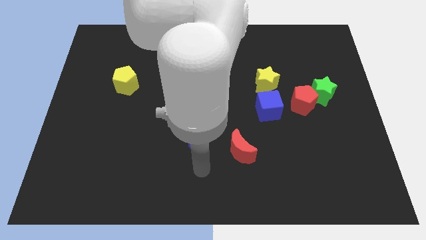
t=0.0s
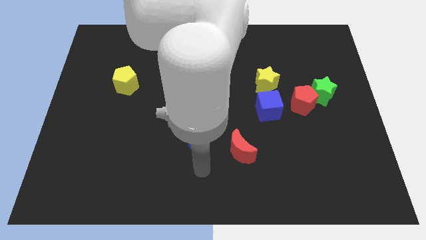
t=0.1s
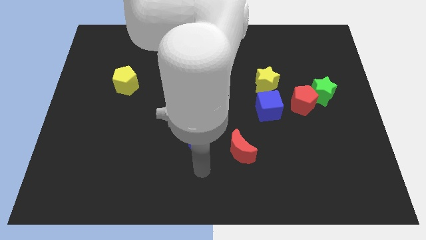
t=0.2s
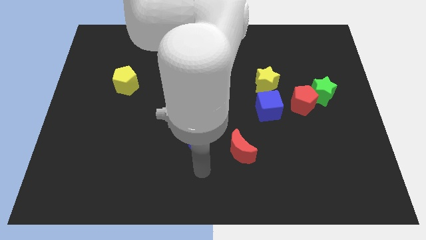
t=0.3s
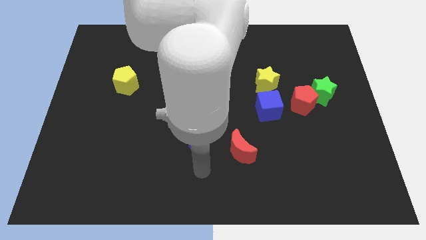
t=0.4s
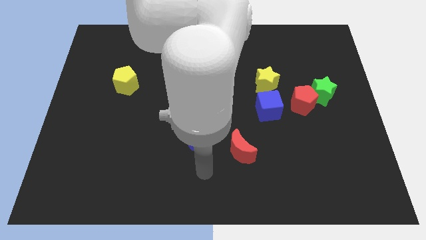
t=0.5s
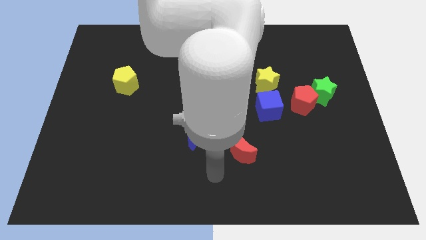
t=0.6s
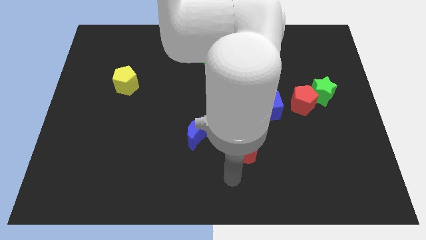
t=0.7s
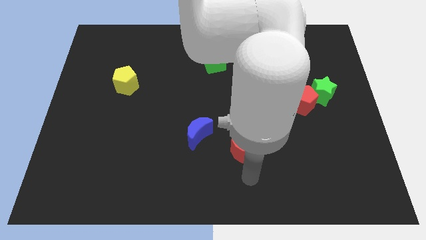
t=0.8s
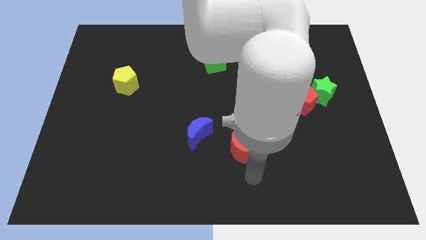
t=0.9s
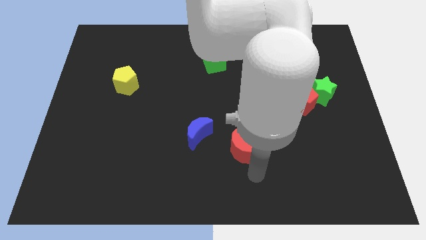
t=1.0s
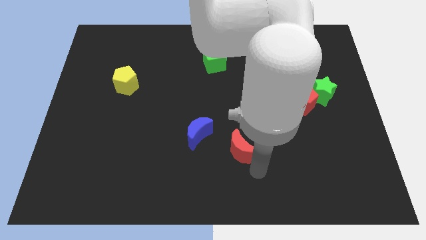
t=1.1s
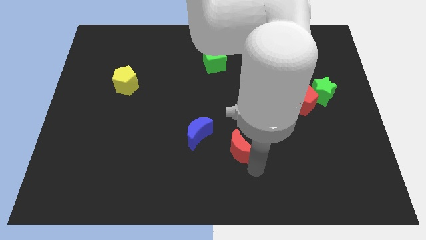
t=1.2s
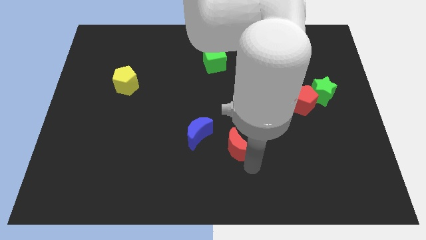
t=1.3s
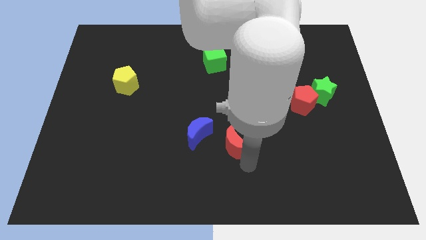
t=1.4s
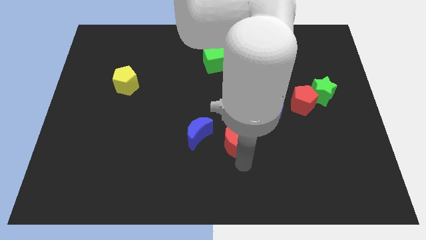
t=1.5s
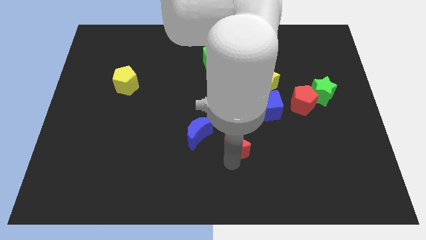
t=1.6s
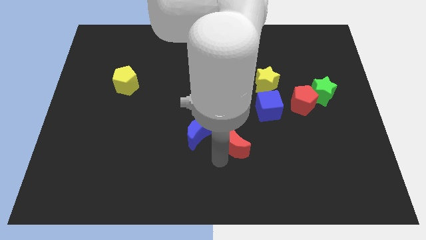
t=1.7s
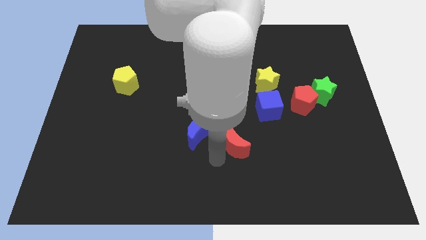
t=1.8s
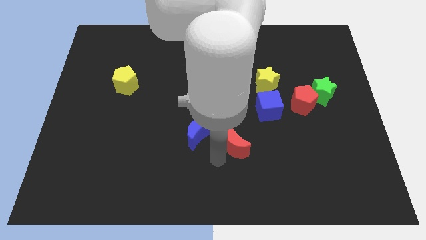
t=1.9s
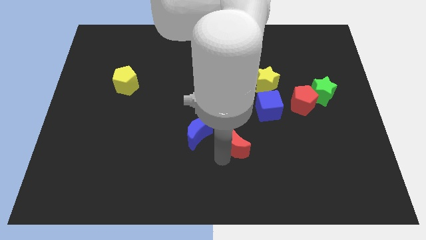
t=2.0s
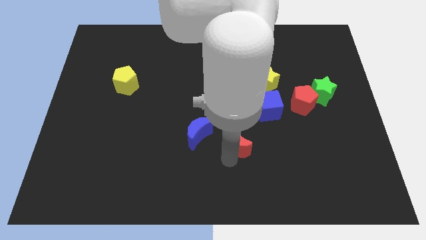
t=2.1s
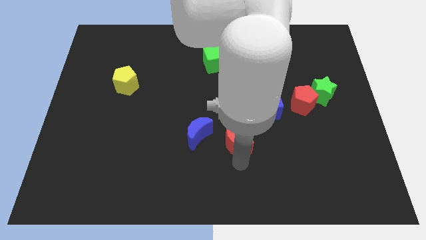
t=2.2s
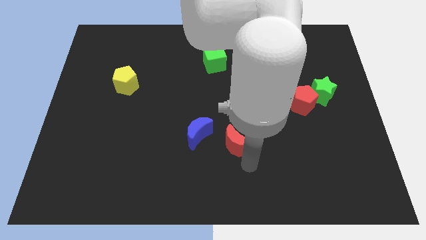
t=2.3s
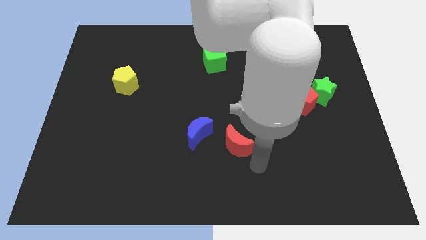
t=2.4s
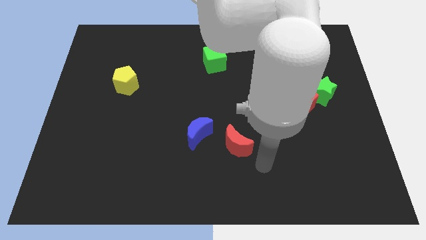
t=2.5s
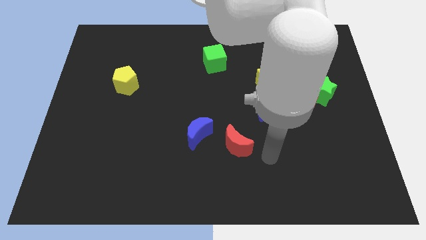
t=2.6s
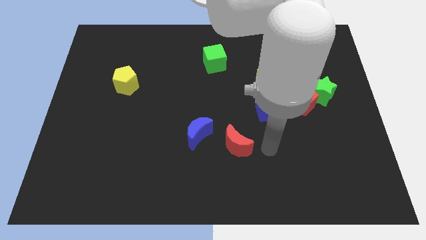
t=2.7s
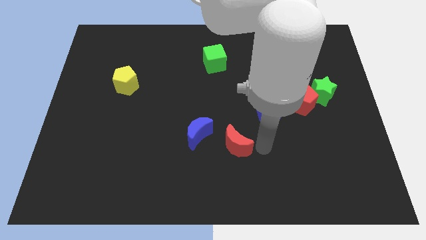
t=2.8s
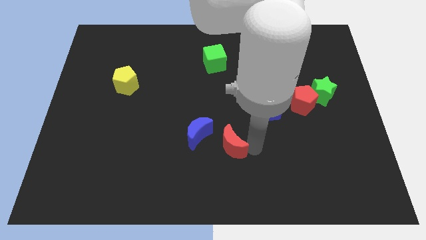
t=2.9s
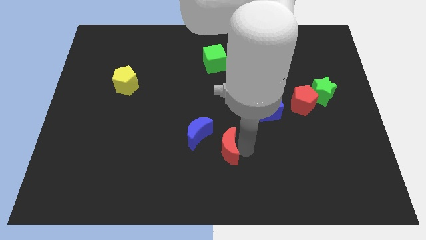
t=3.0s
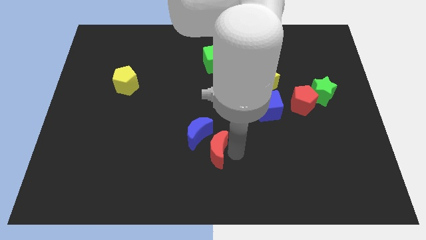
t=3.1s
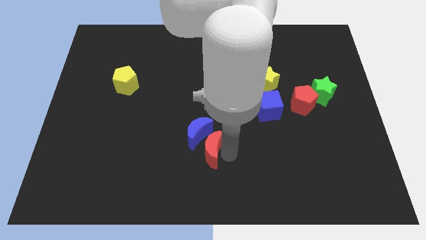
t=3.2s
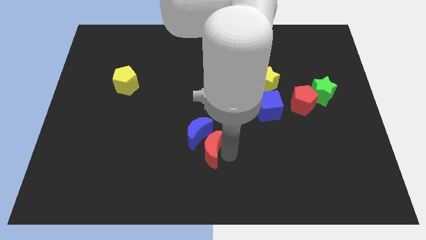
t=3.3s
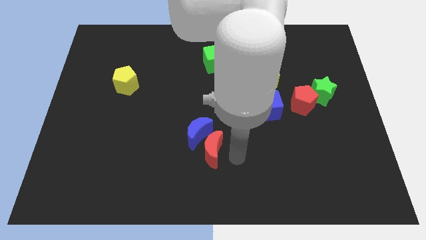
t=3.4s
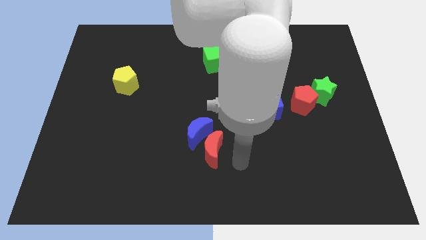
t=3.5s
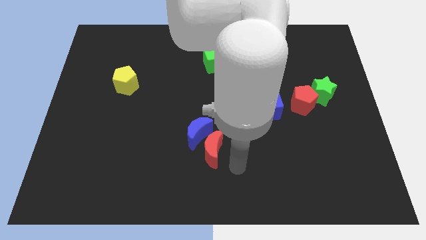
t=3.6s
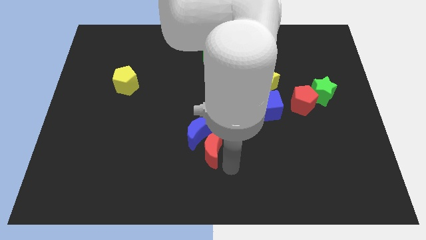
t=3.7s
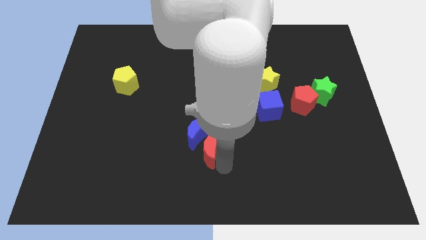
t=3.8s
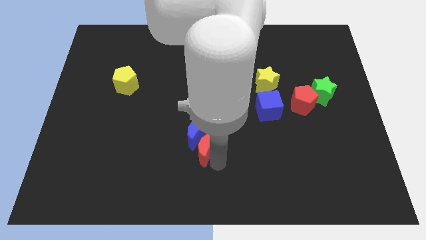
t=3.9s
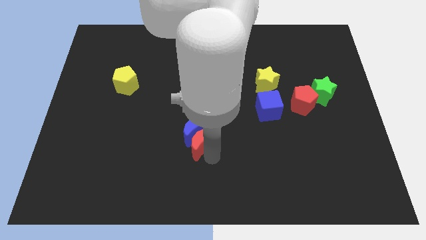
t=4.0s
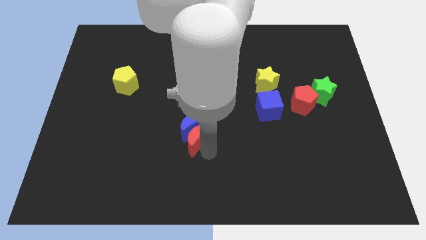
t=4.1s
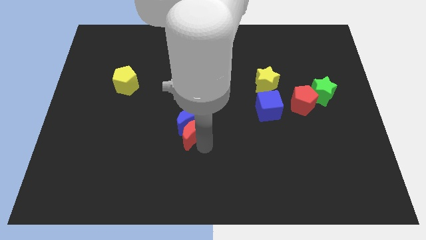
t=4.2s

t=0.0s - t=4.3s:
push the red crescent into blue crescent

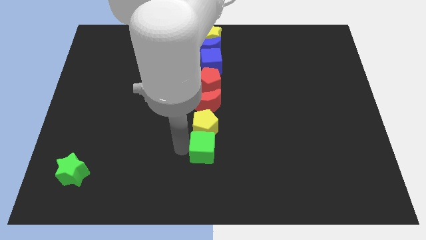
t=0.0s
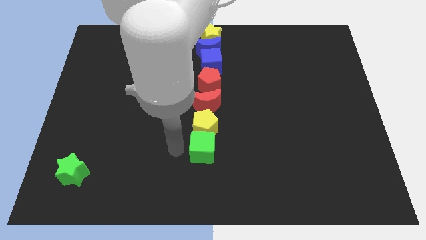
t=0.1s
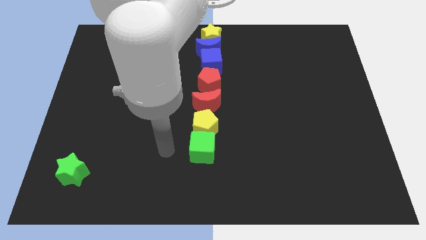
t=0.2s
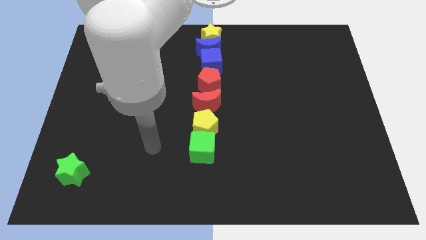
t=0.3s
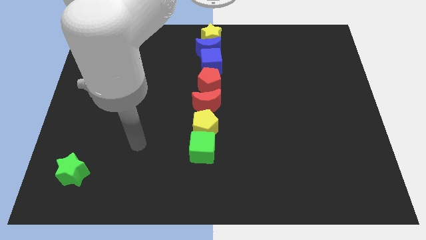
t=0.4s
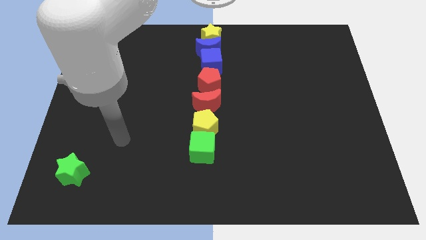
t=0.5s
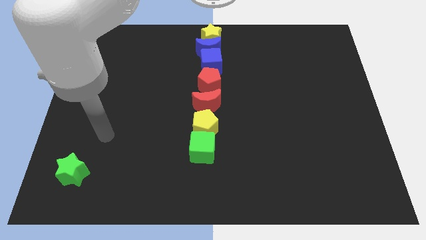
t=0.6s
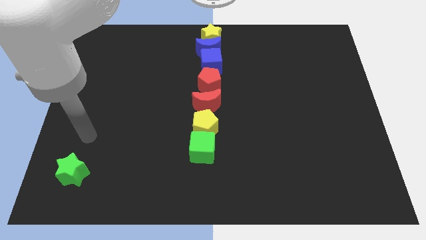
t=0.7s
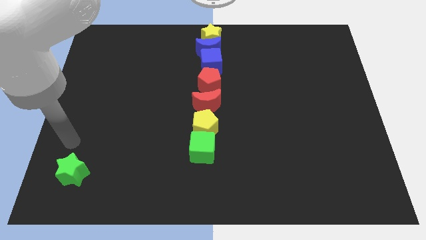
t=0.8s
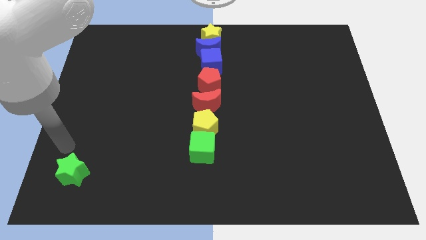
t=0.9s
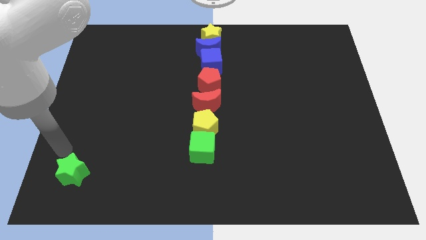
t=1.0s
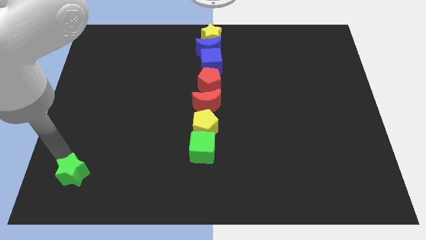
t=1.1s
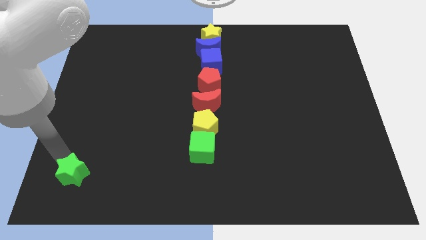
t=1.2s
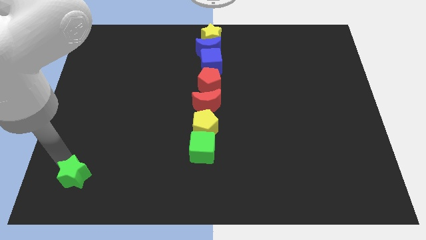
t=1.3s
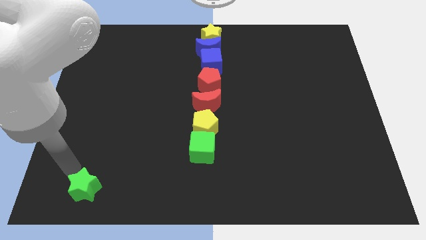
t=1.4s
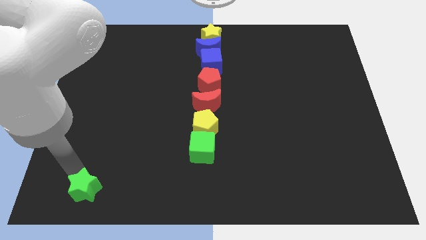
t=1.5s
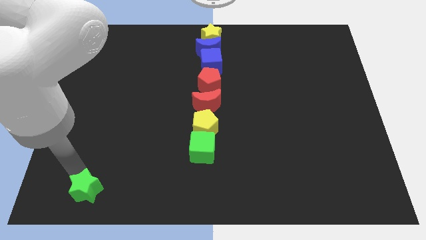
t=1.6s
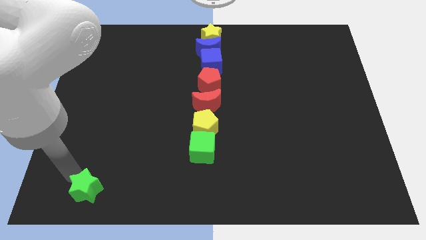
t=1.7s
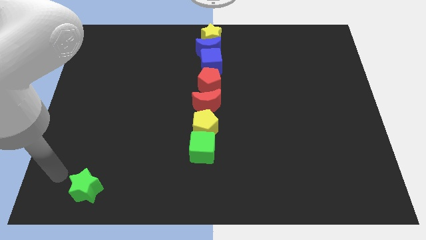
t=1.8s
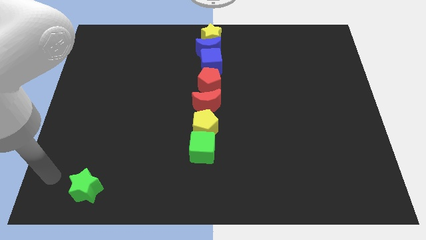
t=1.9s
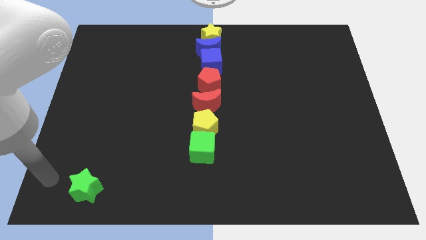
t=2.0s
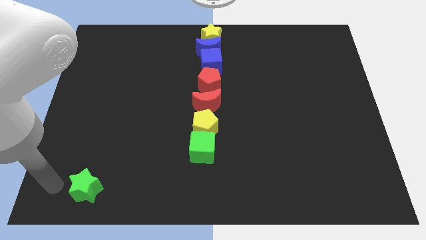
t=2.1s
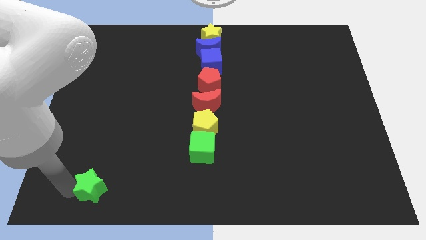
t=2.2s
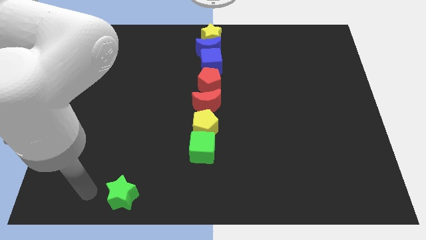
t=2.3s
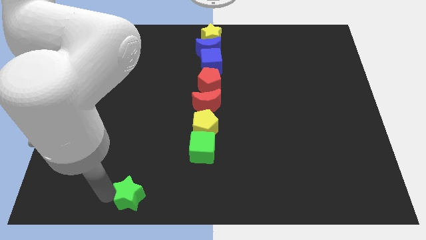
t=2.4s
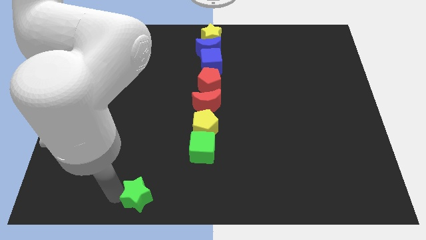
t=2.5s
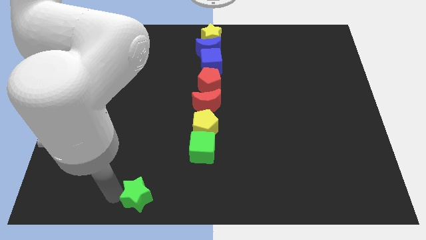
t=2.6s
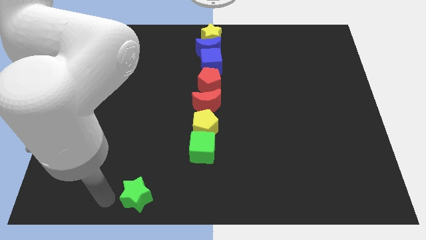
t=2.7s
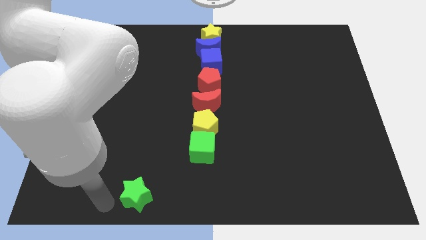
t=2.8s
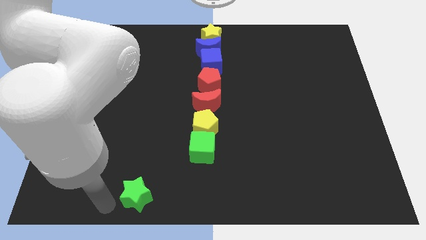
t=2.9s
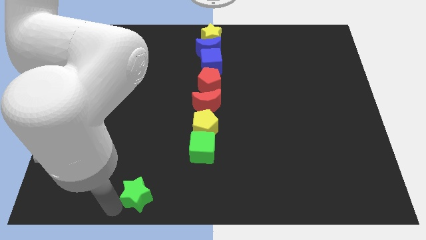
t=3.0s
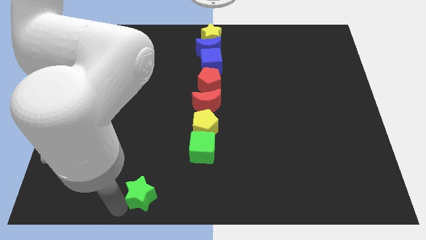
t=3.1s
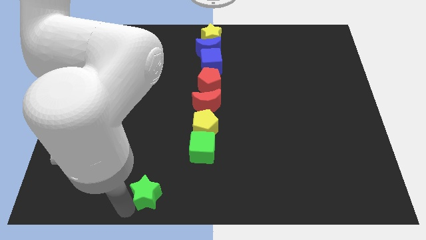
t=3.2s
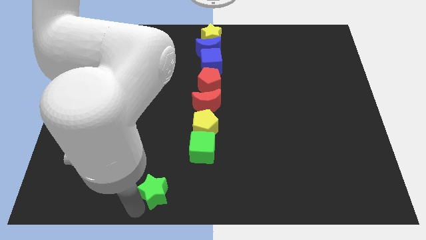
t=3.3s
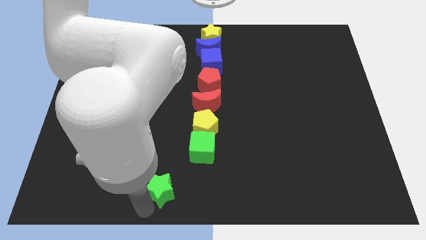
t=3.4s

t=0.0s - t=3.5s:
push the green star towards downward

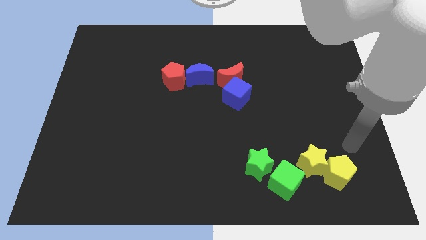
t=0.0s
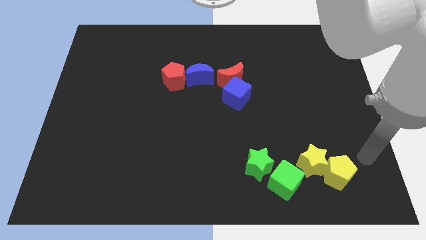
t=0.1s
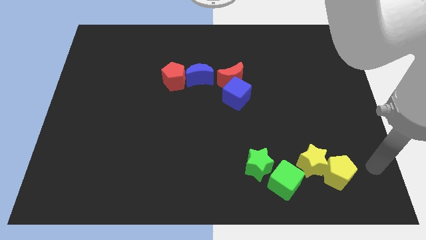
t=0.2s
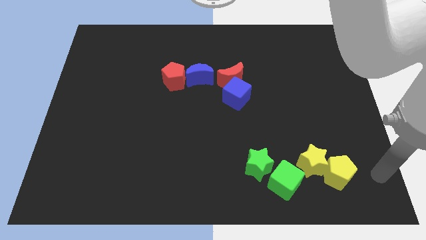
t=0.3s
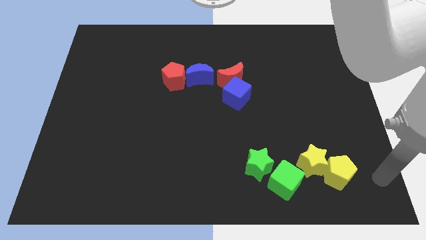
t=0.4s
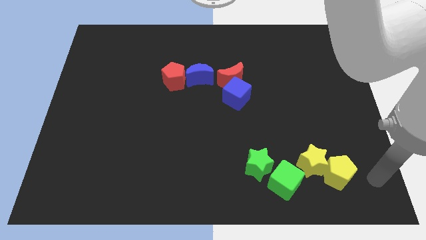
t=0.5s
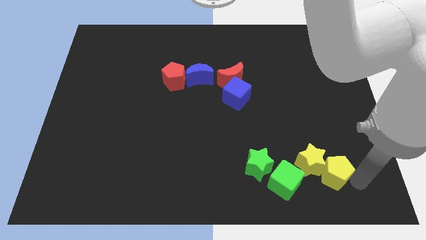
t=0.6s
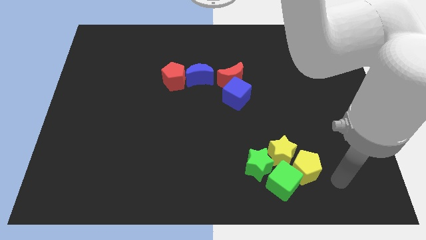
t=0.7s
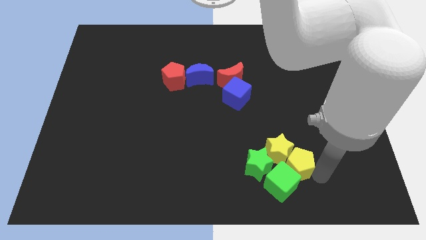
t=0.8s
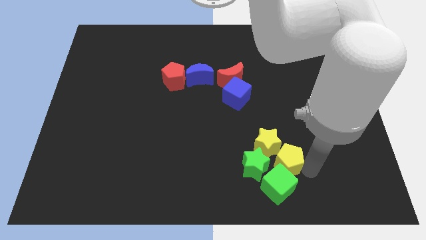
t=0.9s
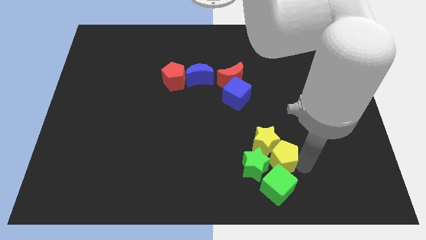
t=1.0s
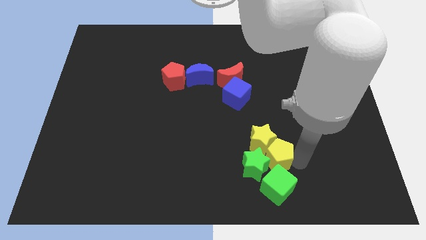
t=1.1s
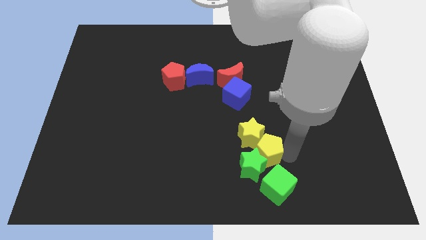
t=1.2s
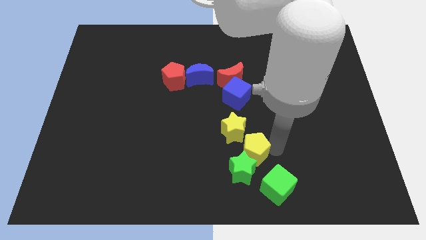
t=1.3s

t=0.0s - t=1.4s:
move the yellow pentagon along with the yellow star towards the center
